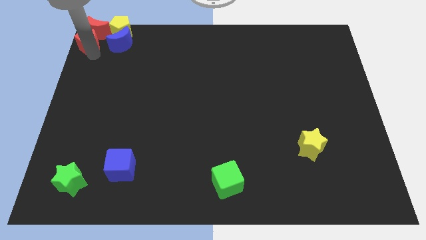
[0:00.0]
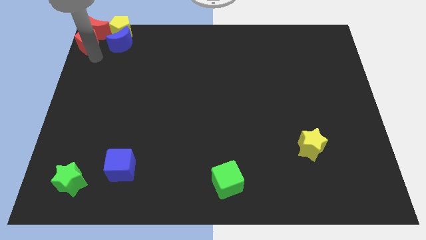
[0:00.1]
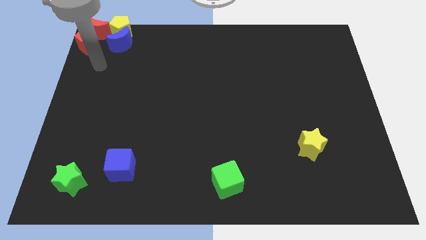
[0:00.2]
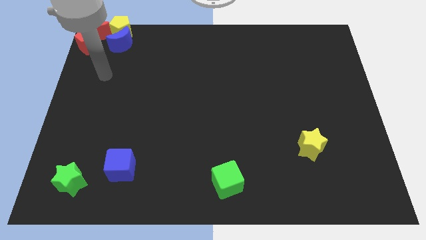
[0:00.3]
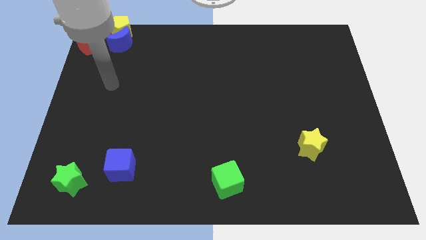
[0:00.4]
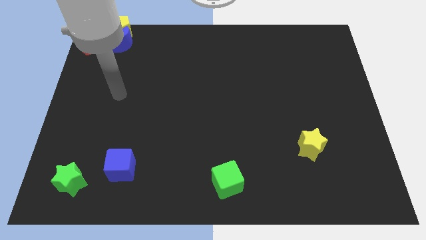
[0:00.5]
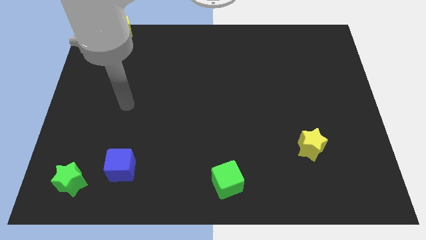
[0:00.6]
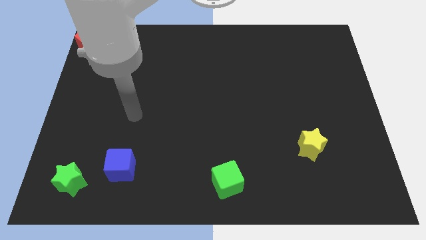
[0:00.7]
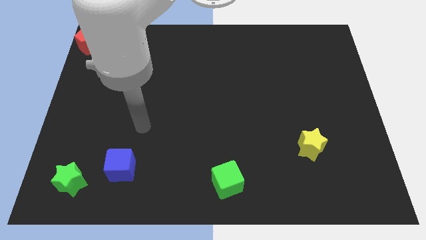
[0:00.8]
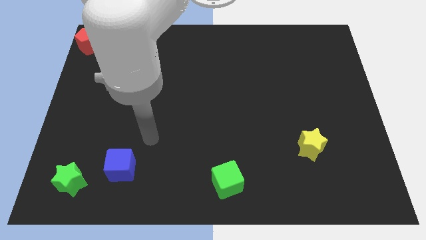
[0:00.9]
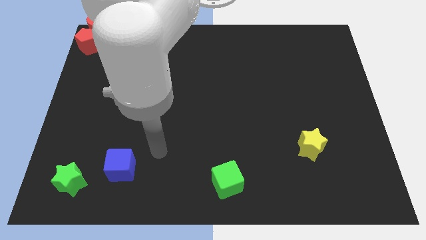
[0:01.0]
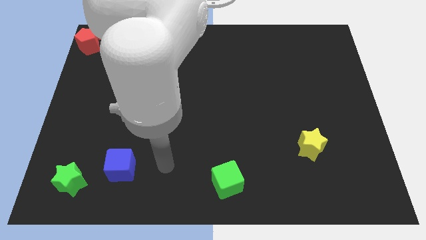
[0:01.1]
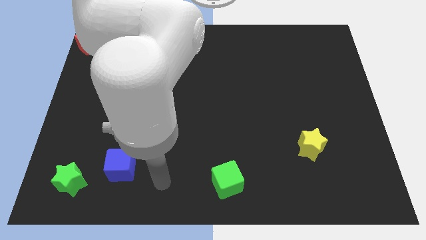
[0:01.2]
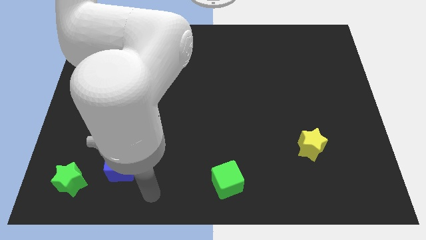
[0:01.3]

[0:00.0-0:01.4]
move your arm away from the red pentagon

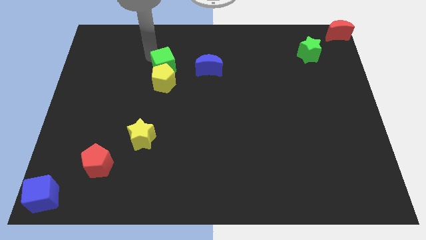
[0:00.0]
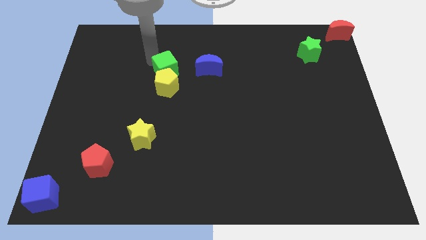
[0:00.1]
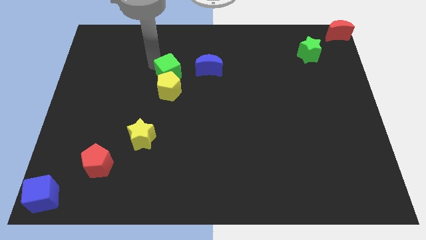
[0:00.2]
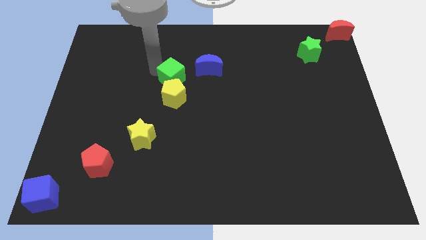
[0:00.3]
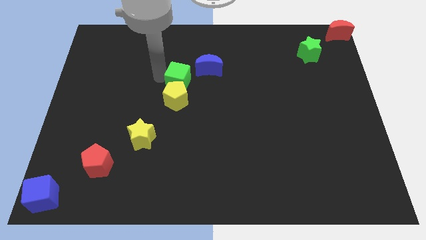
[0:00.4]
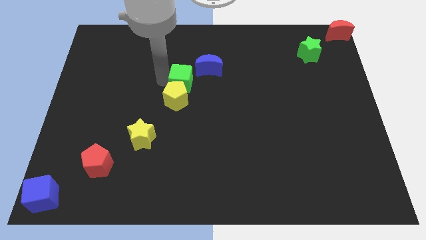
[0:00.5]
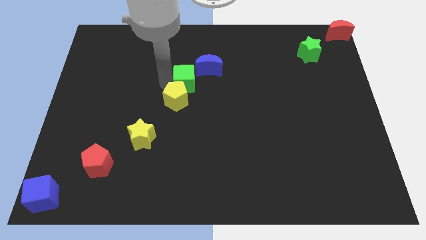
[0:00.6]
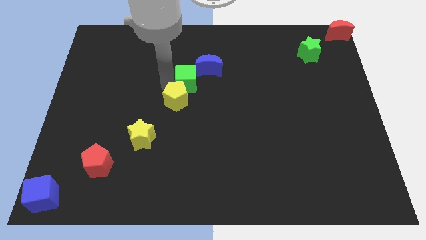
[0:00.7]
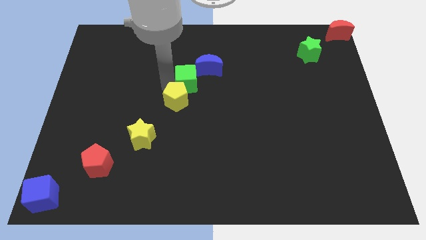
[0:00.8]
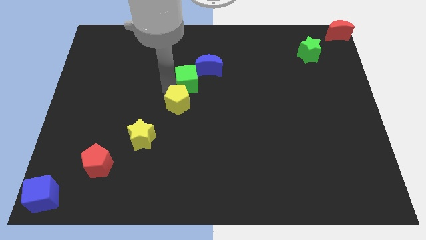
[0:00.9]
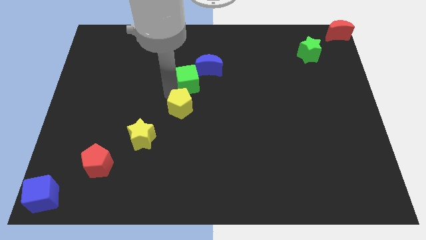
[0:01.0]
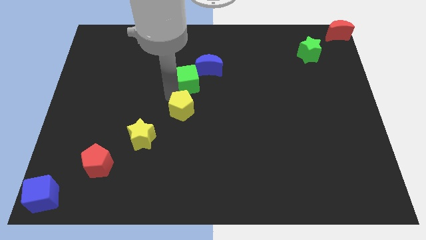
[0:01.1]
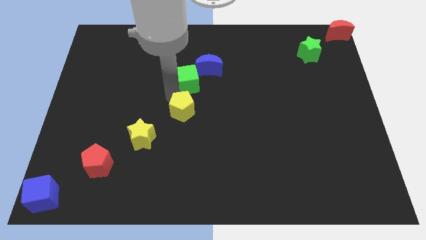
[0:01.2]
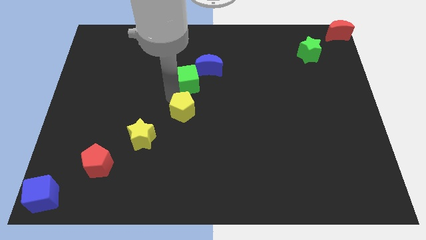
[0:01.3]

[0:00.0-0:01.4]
place the yellow pentagon diagonally above the yellow star

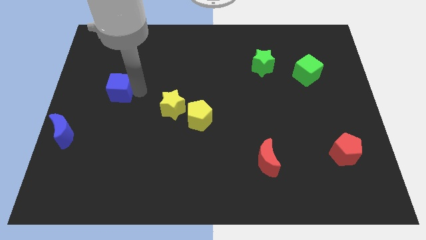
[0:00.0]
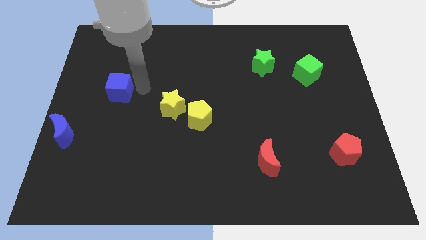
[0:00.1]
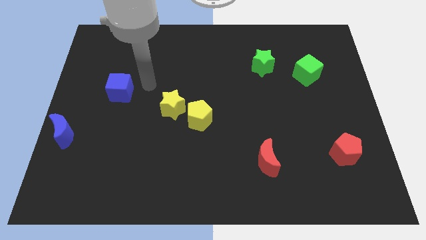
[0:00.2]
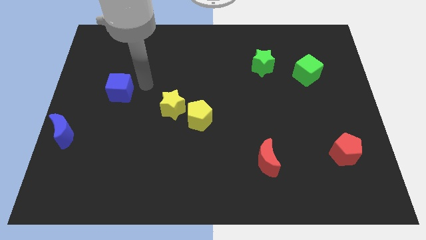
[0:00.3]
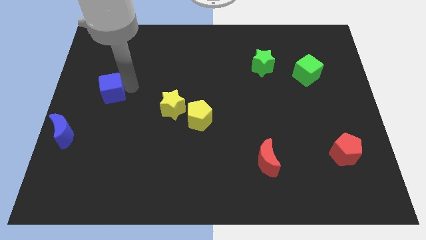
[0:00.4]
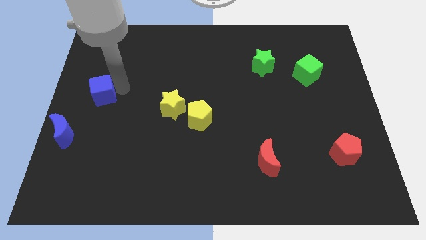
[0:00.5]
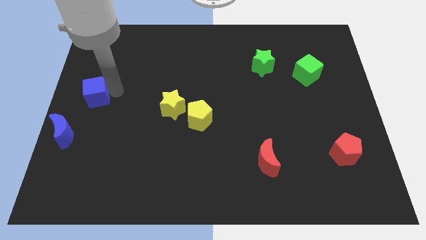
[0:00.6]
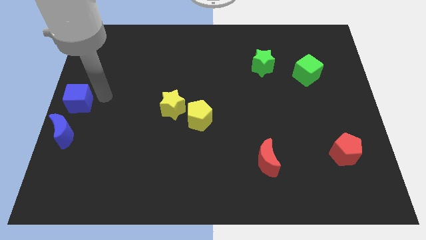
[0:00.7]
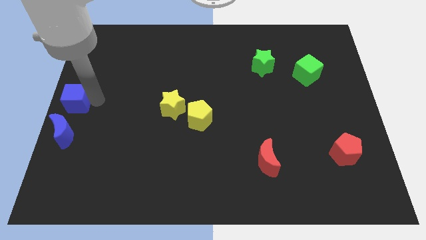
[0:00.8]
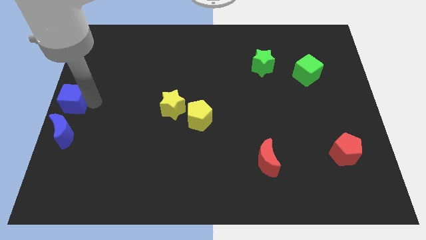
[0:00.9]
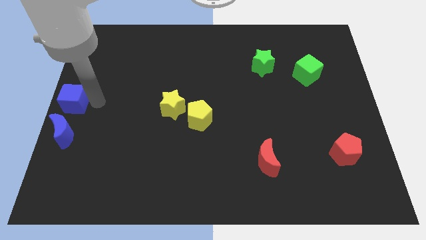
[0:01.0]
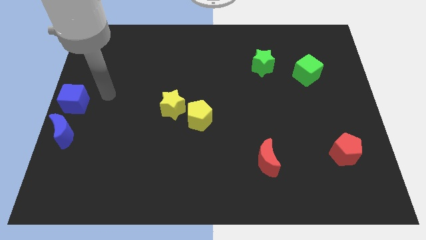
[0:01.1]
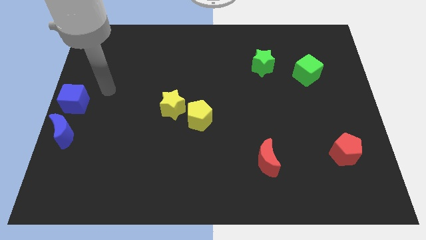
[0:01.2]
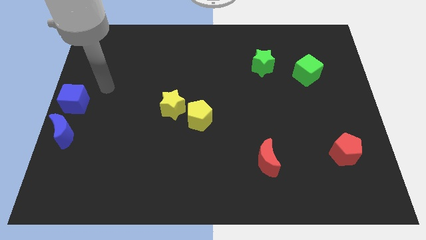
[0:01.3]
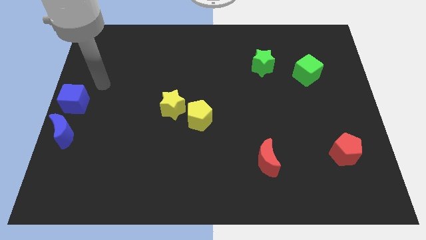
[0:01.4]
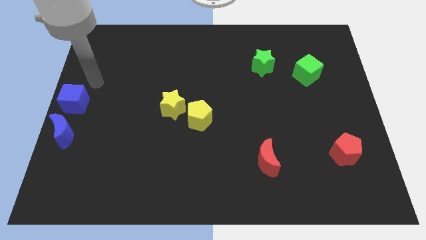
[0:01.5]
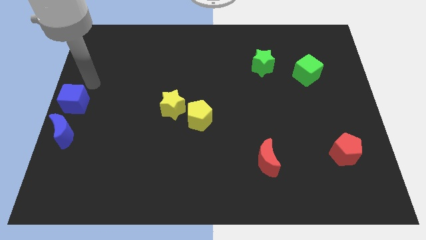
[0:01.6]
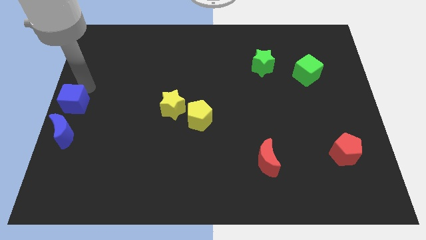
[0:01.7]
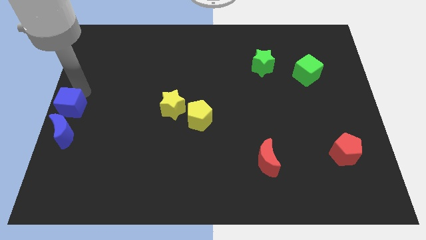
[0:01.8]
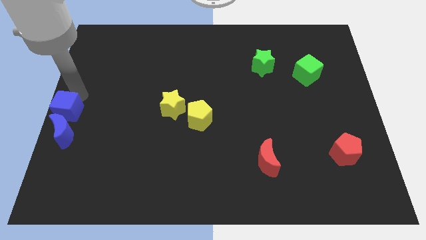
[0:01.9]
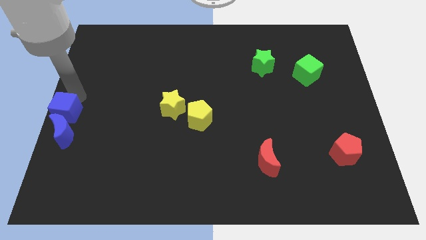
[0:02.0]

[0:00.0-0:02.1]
place the blue cube to the top of the blue moon

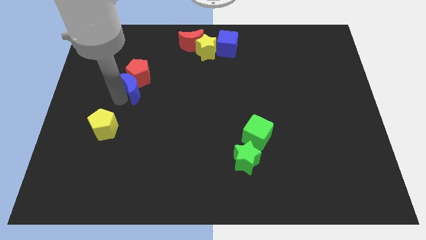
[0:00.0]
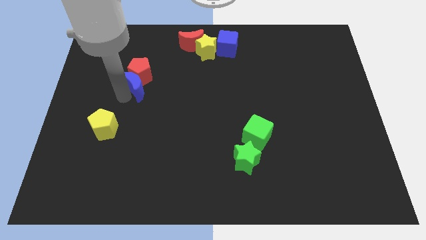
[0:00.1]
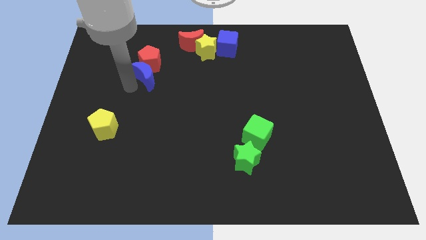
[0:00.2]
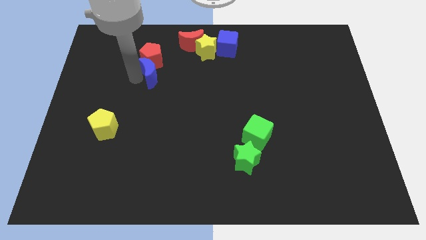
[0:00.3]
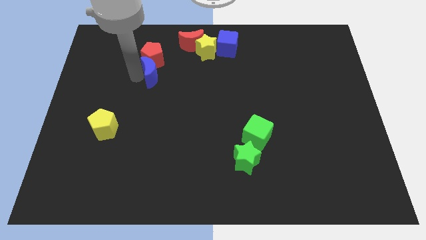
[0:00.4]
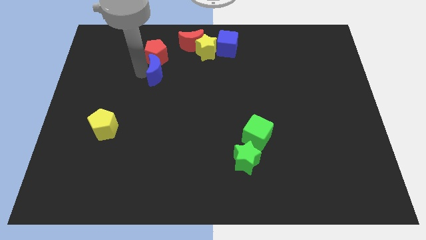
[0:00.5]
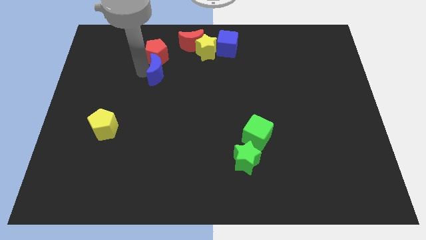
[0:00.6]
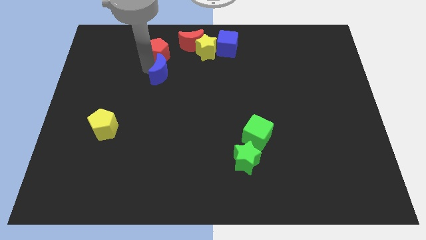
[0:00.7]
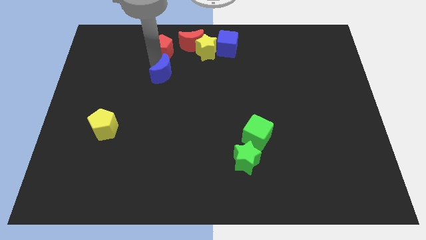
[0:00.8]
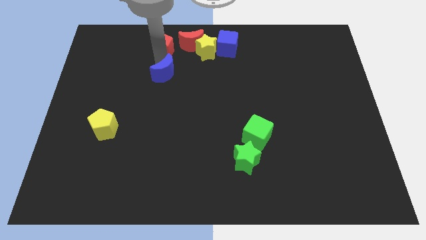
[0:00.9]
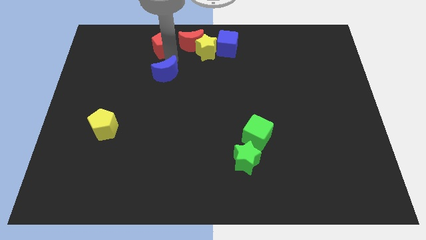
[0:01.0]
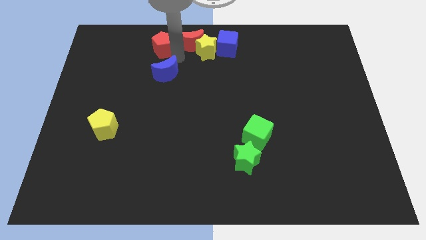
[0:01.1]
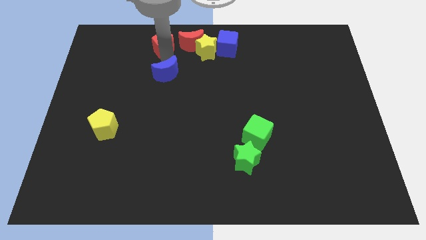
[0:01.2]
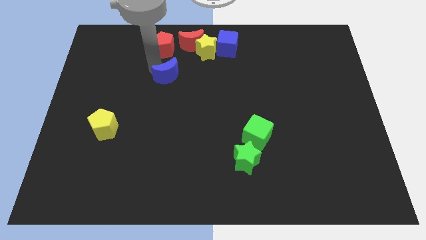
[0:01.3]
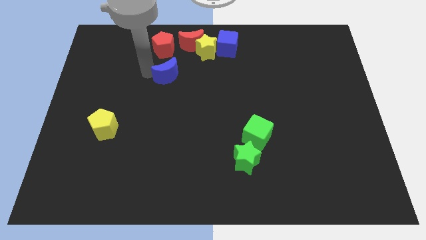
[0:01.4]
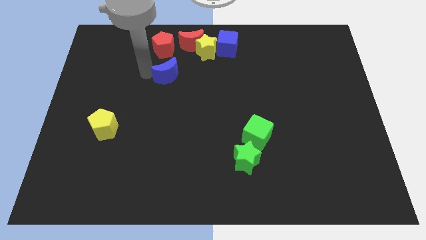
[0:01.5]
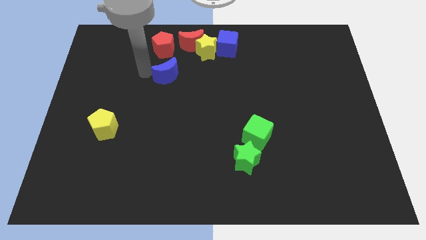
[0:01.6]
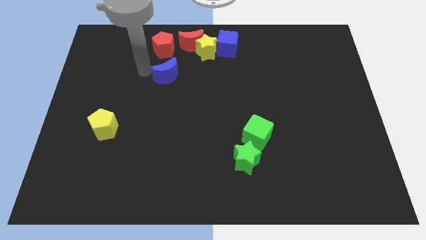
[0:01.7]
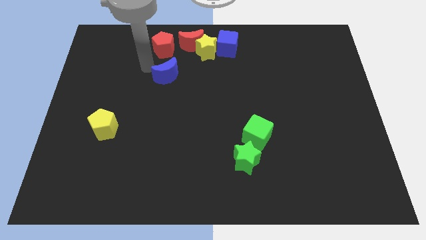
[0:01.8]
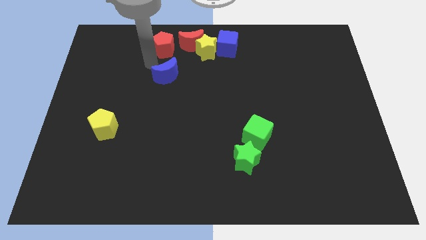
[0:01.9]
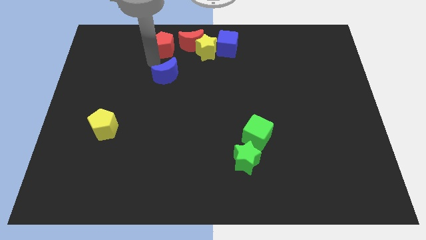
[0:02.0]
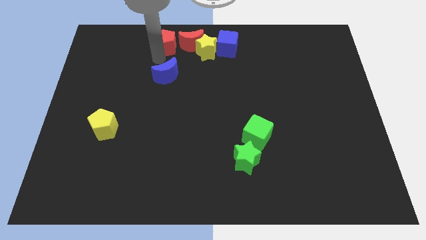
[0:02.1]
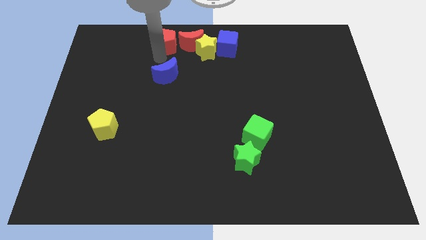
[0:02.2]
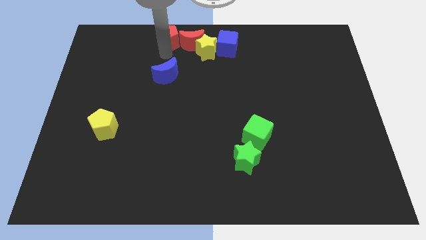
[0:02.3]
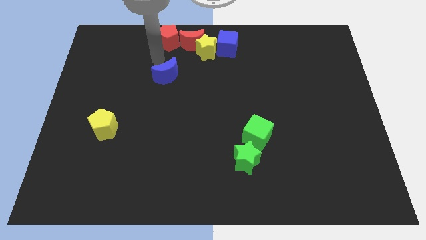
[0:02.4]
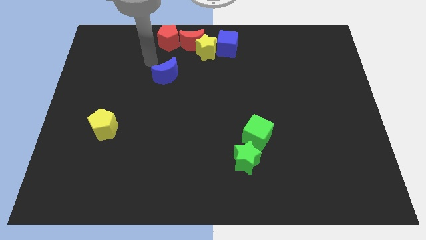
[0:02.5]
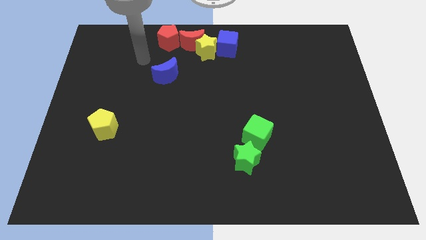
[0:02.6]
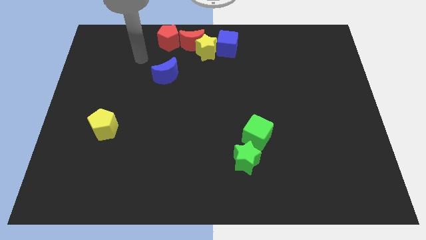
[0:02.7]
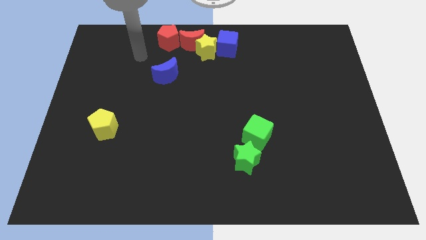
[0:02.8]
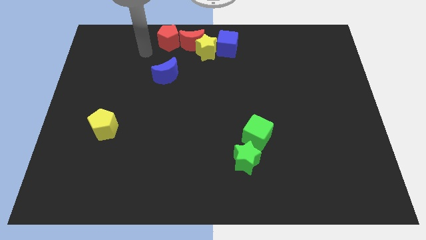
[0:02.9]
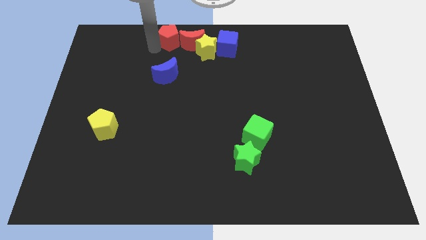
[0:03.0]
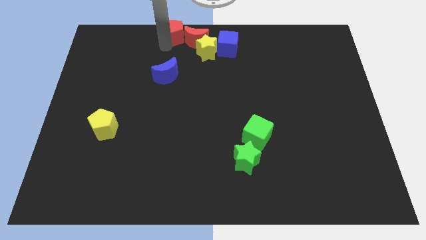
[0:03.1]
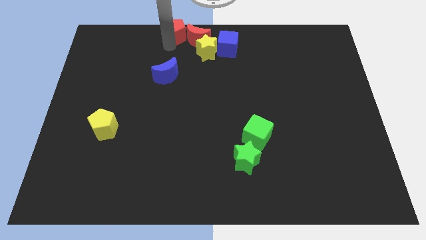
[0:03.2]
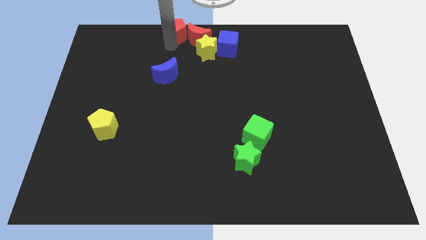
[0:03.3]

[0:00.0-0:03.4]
move the red pentagon to the top side of the red crescent

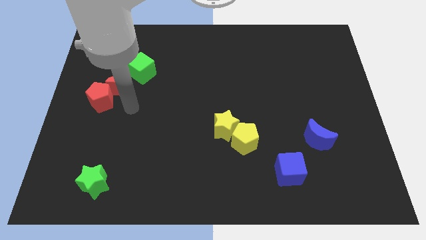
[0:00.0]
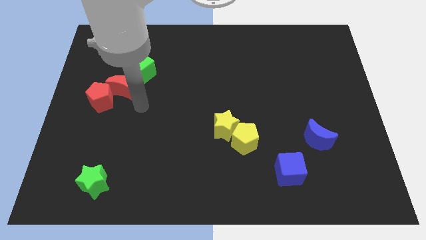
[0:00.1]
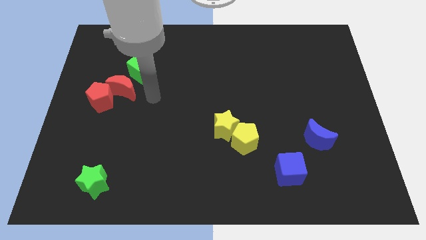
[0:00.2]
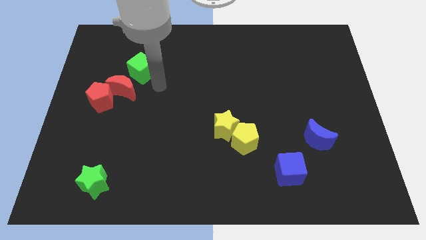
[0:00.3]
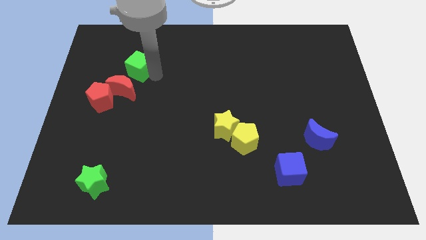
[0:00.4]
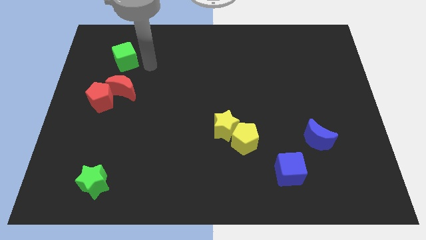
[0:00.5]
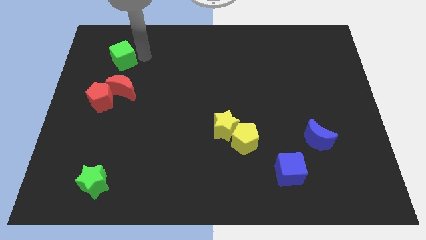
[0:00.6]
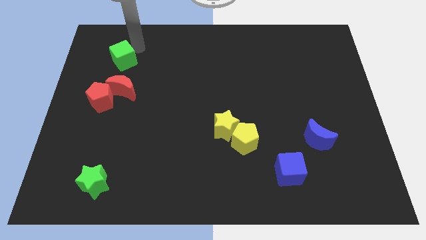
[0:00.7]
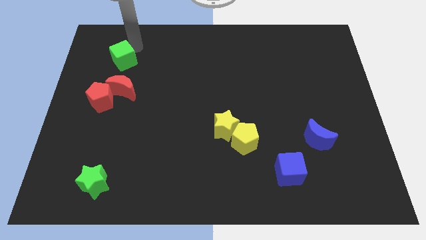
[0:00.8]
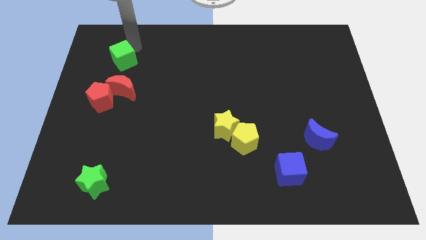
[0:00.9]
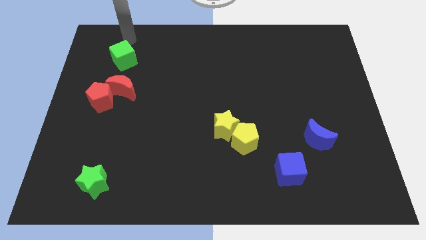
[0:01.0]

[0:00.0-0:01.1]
place the green cube above the red moon
